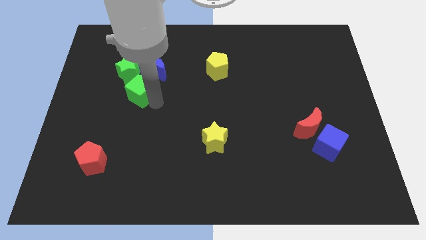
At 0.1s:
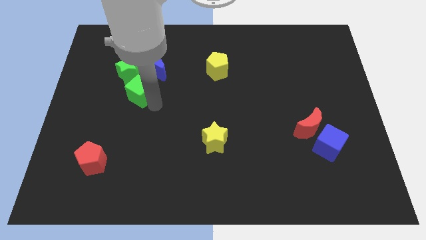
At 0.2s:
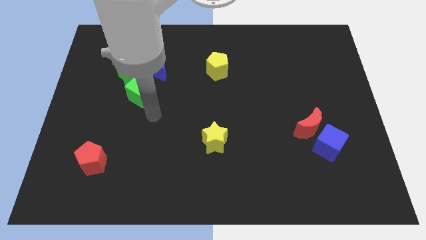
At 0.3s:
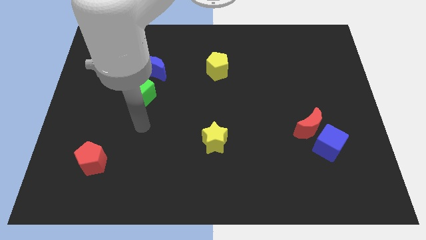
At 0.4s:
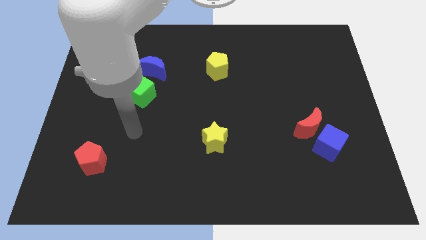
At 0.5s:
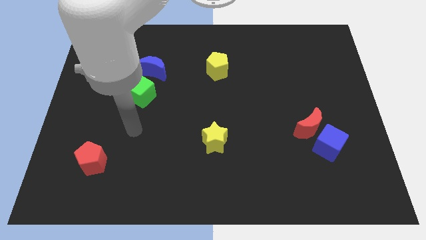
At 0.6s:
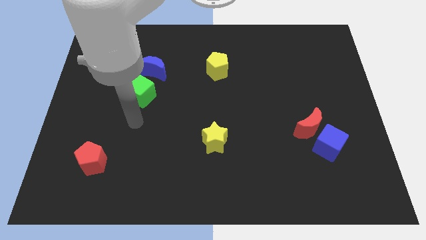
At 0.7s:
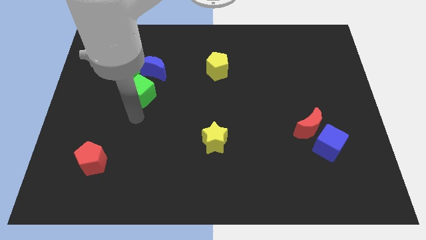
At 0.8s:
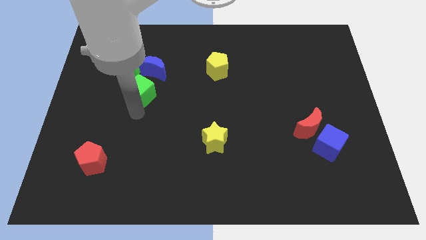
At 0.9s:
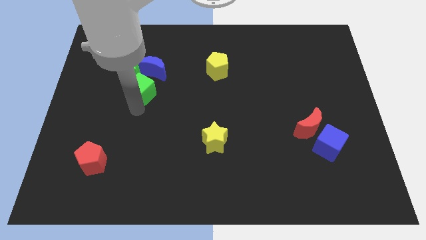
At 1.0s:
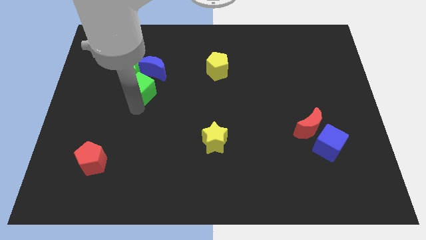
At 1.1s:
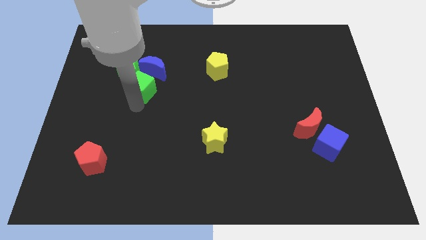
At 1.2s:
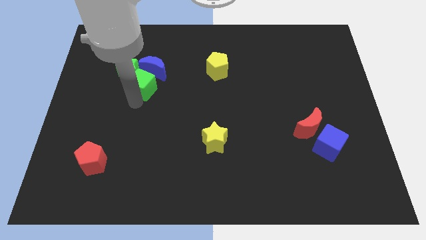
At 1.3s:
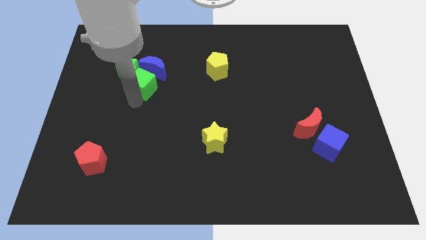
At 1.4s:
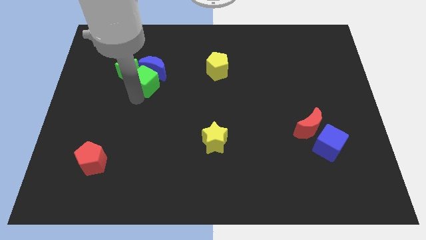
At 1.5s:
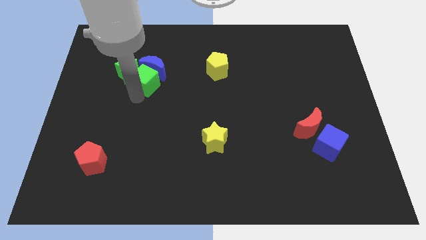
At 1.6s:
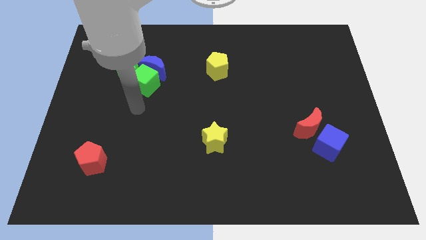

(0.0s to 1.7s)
place the green cube down to the blue moon

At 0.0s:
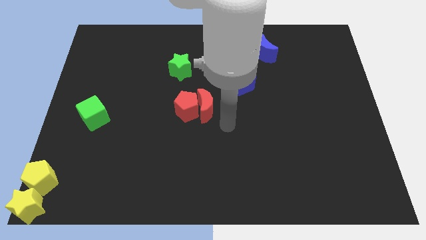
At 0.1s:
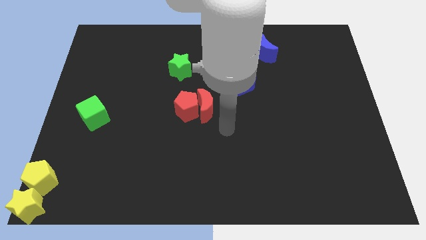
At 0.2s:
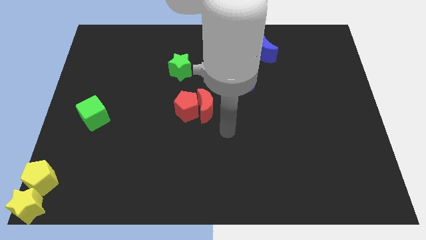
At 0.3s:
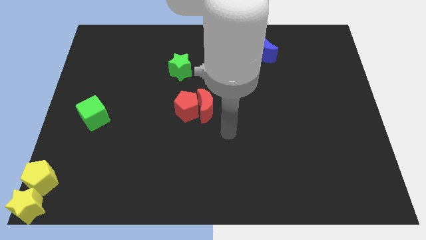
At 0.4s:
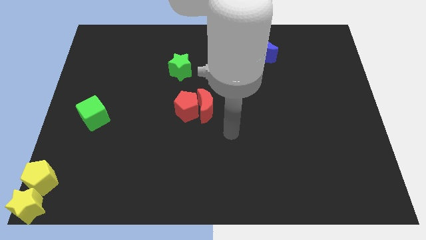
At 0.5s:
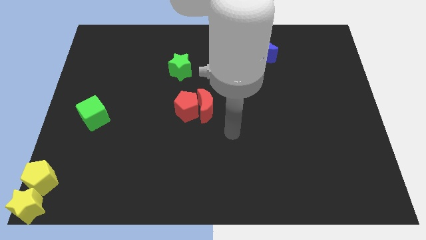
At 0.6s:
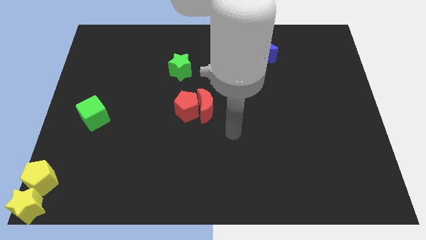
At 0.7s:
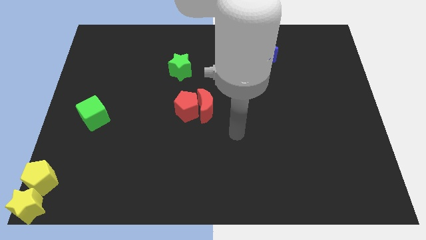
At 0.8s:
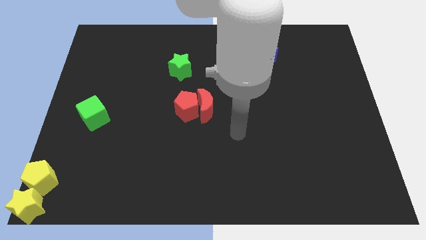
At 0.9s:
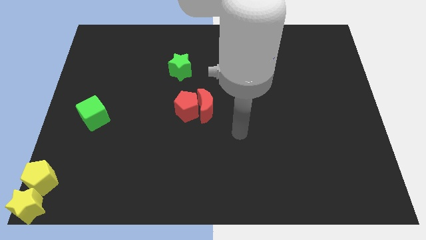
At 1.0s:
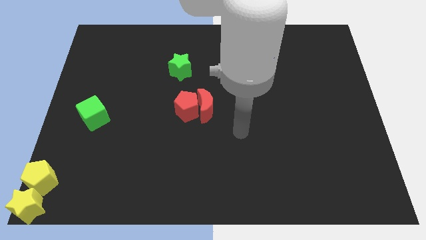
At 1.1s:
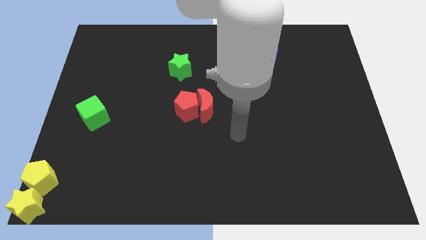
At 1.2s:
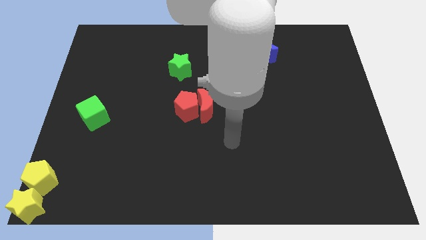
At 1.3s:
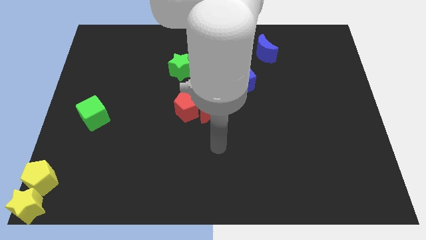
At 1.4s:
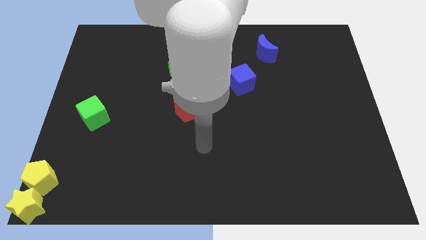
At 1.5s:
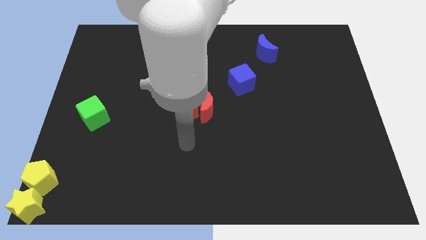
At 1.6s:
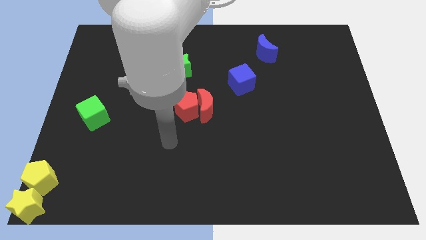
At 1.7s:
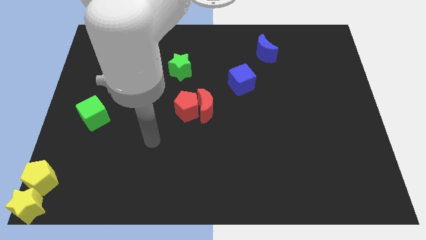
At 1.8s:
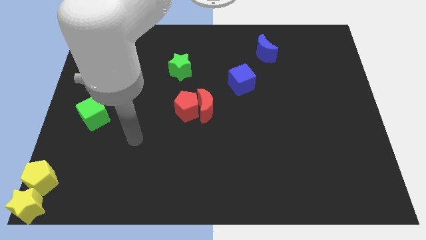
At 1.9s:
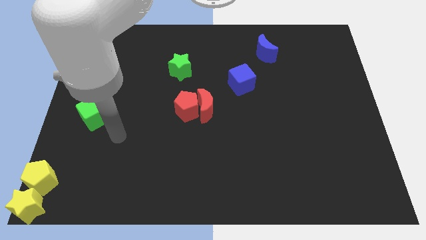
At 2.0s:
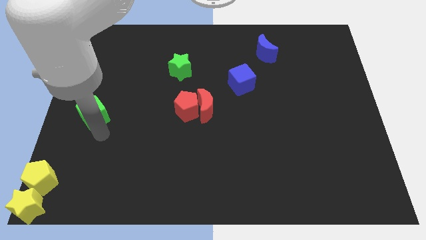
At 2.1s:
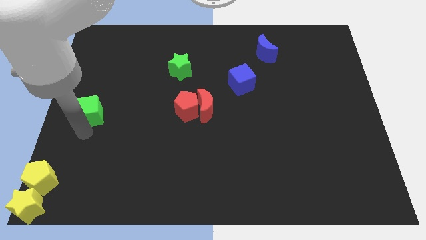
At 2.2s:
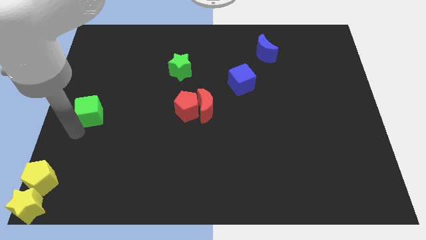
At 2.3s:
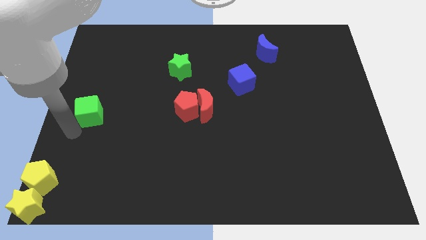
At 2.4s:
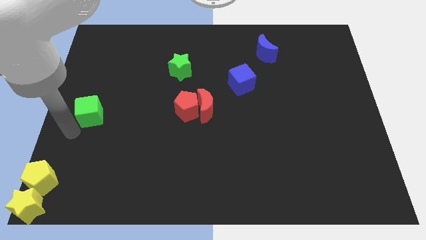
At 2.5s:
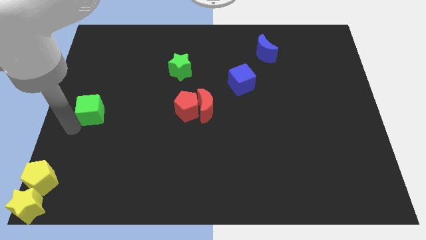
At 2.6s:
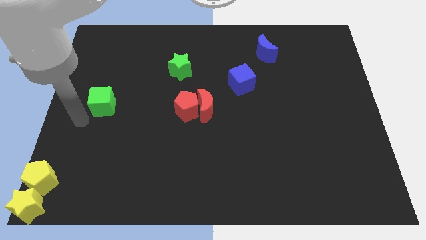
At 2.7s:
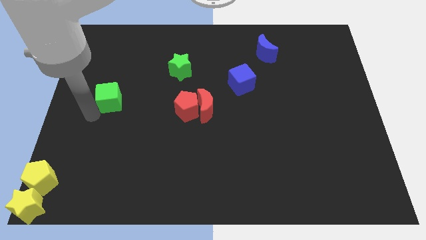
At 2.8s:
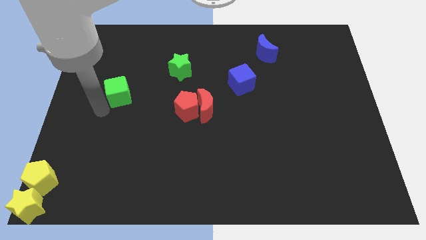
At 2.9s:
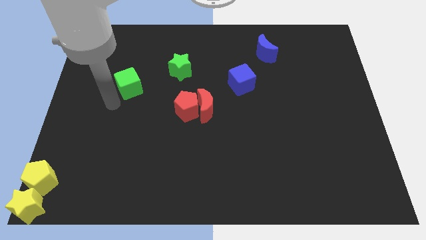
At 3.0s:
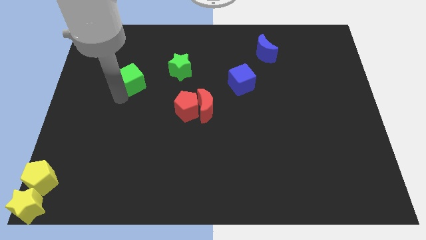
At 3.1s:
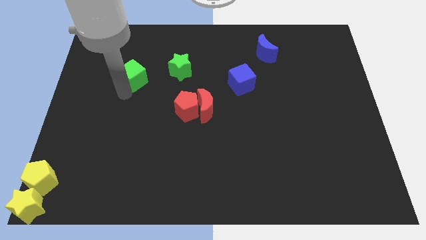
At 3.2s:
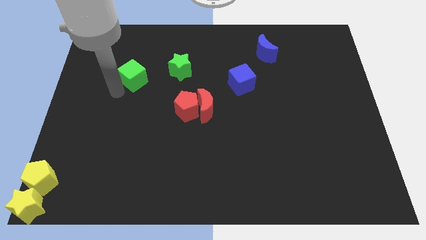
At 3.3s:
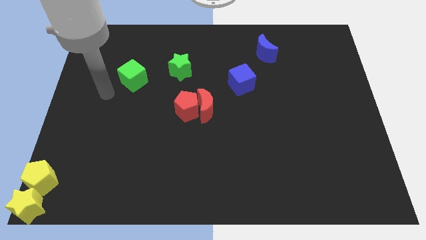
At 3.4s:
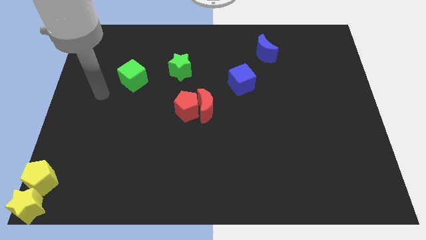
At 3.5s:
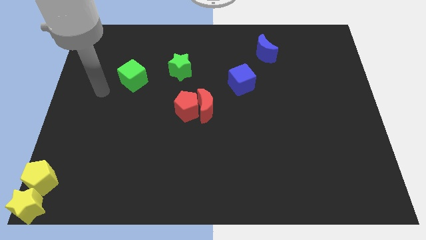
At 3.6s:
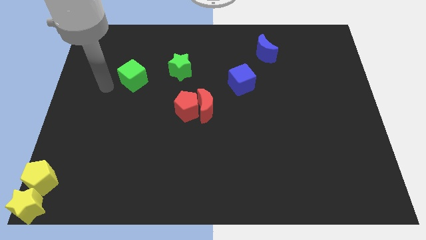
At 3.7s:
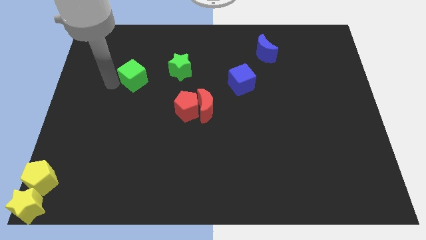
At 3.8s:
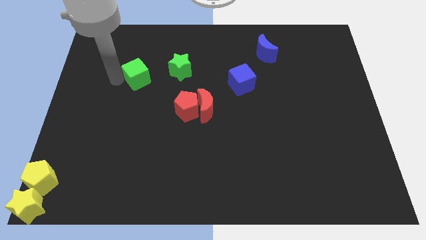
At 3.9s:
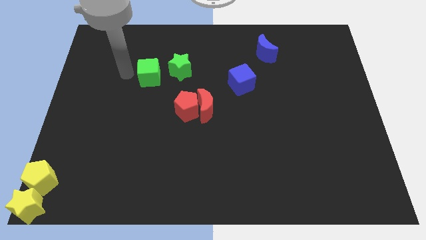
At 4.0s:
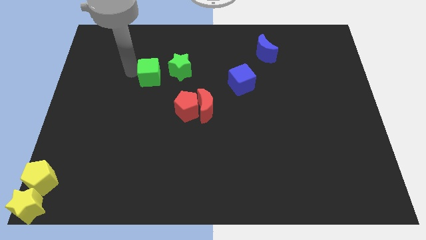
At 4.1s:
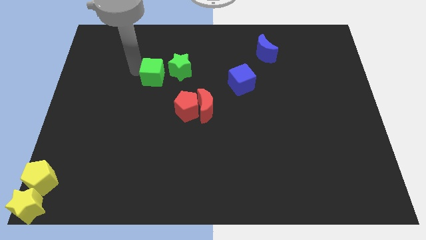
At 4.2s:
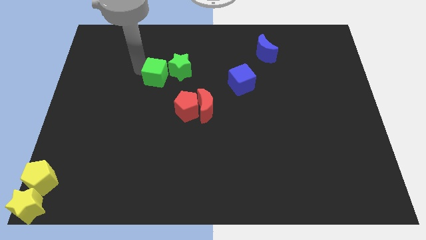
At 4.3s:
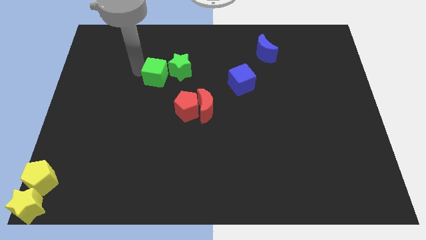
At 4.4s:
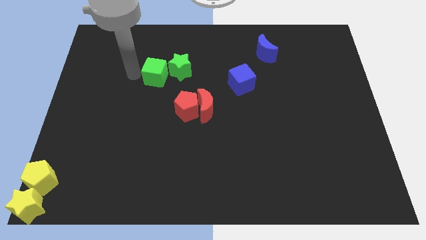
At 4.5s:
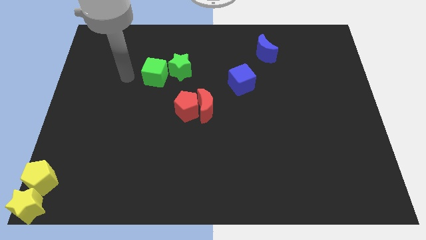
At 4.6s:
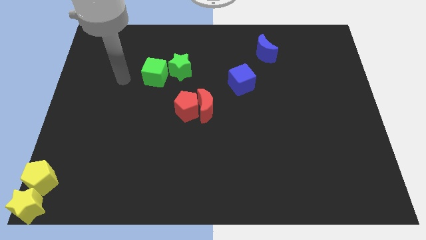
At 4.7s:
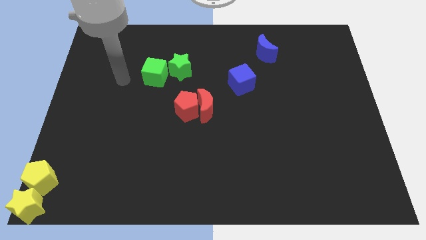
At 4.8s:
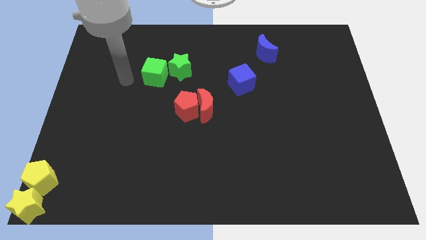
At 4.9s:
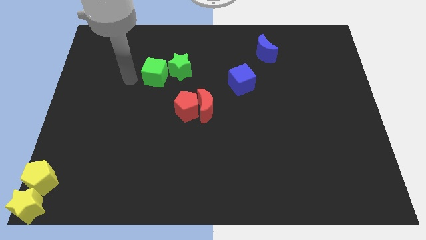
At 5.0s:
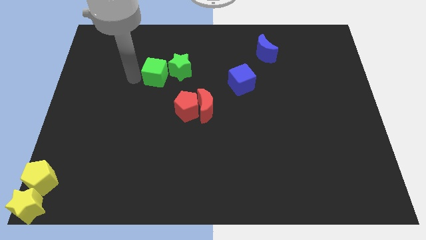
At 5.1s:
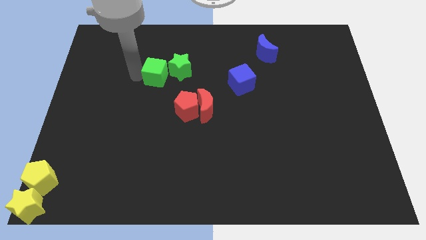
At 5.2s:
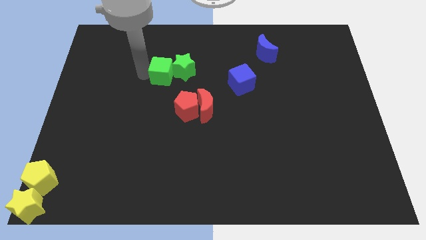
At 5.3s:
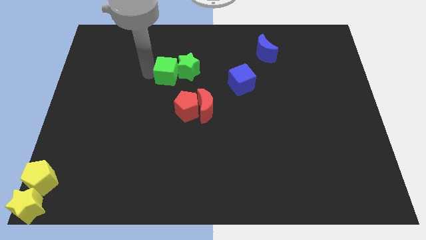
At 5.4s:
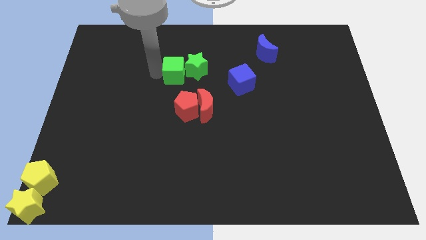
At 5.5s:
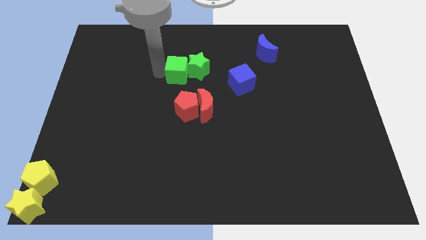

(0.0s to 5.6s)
move the green cube into the green star

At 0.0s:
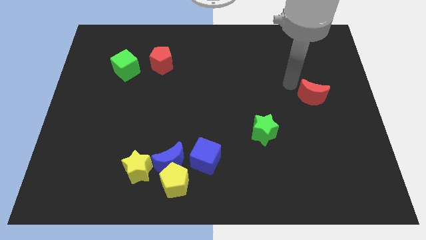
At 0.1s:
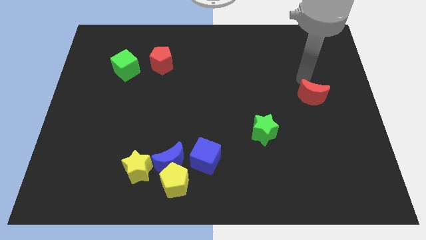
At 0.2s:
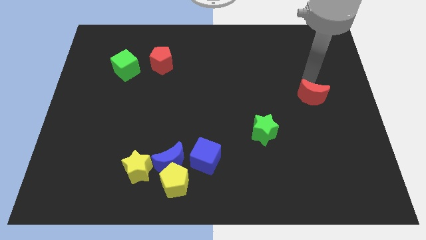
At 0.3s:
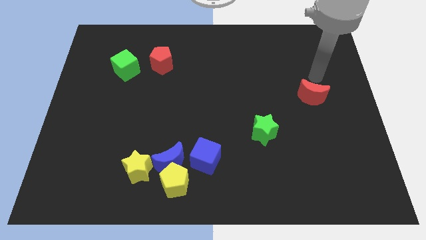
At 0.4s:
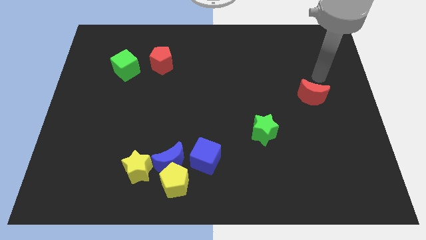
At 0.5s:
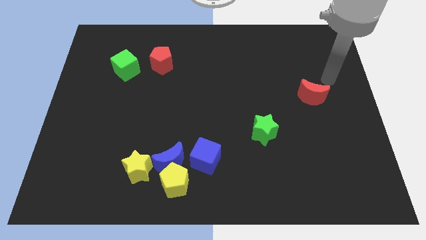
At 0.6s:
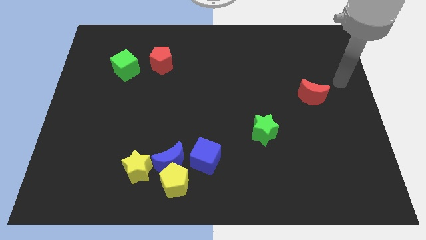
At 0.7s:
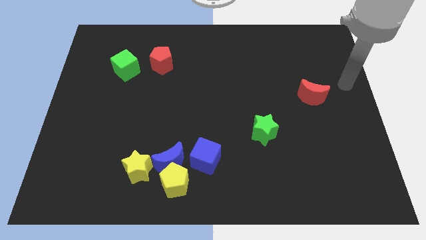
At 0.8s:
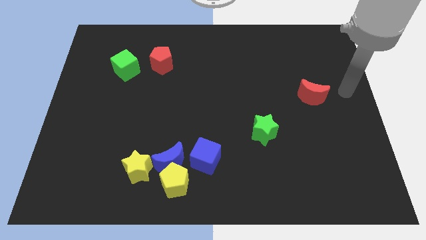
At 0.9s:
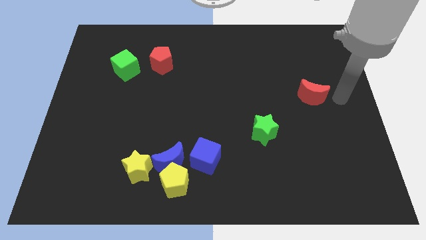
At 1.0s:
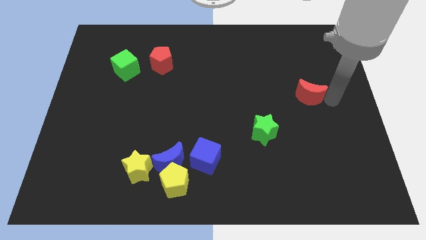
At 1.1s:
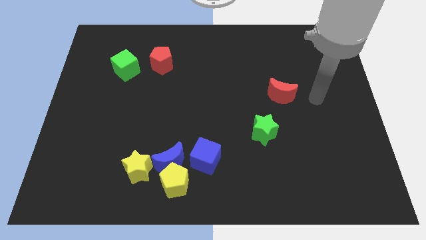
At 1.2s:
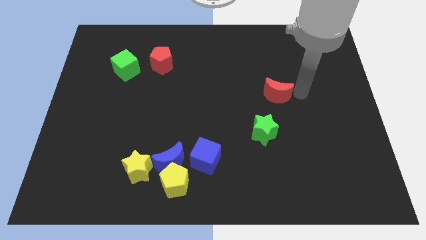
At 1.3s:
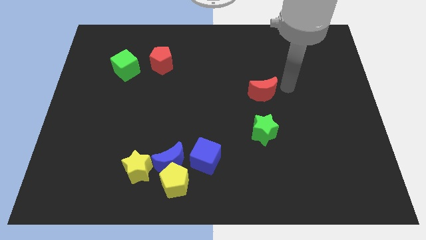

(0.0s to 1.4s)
push the red crescent to the top of the green star

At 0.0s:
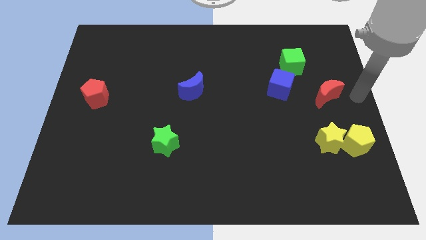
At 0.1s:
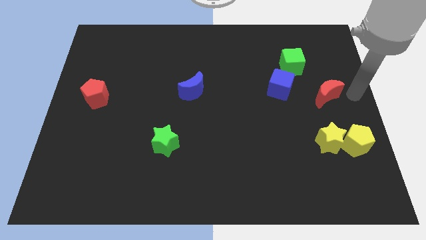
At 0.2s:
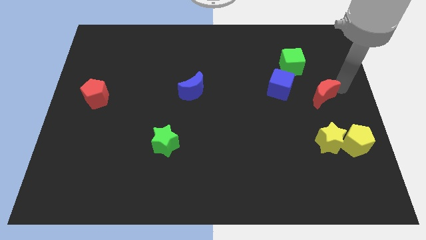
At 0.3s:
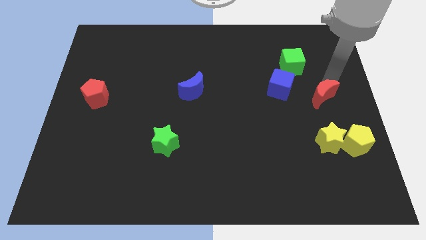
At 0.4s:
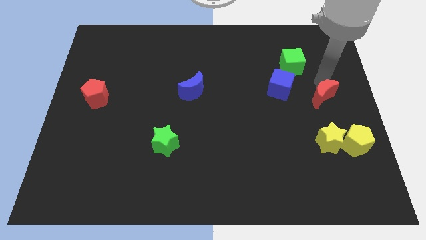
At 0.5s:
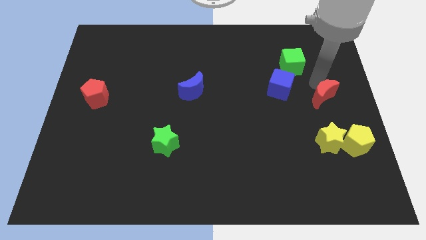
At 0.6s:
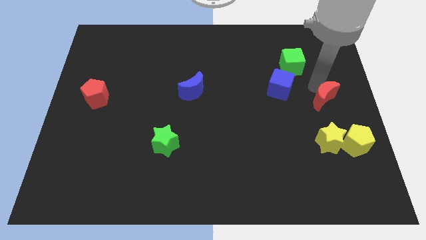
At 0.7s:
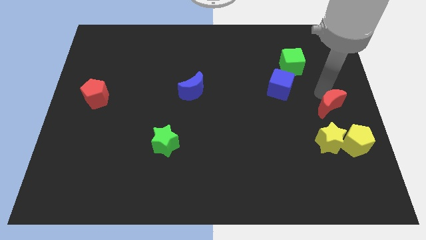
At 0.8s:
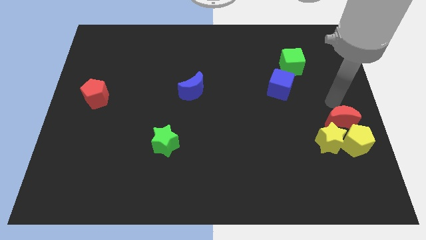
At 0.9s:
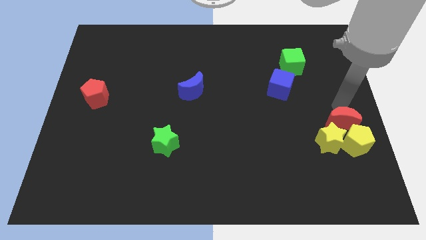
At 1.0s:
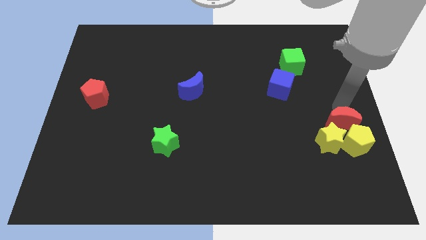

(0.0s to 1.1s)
drag the red moon into yellow blocks
